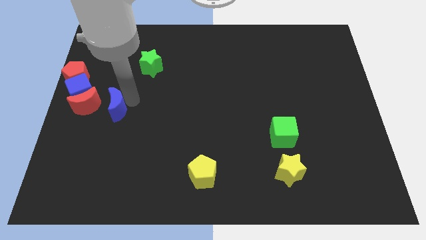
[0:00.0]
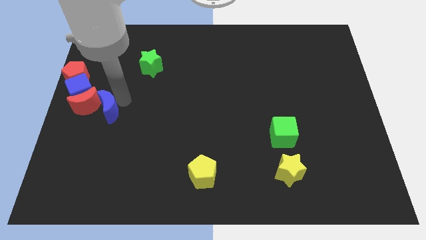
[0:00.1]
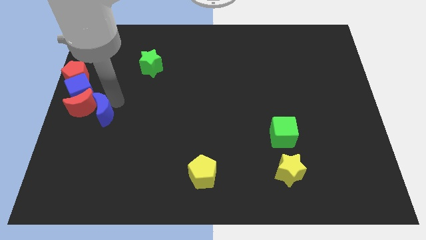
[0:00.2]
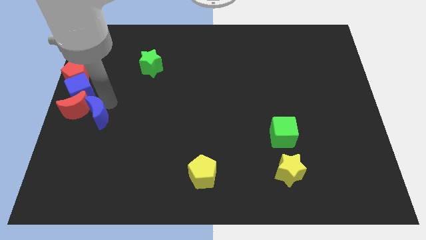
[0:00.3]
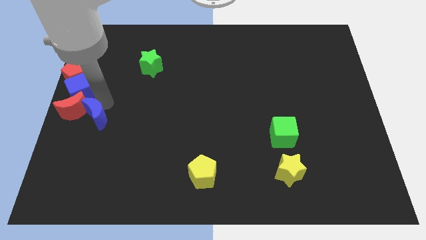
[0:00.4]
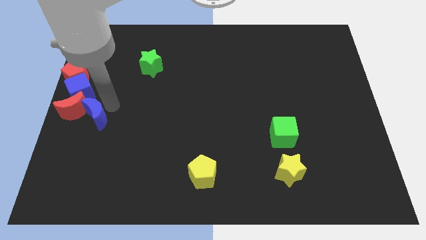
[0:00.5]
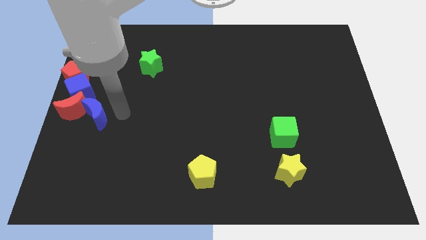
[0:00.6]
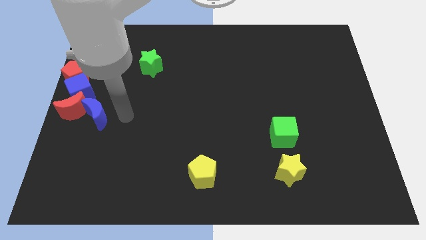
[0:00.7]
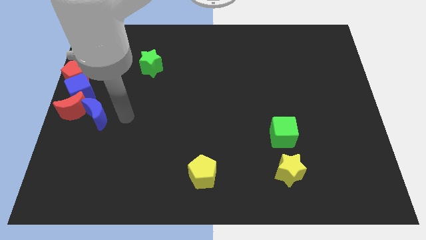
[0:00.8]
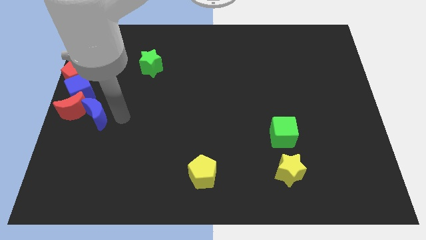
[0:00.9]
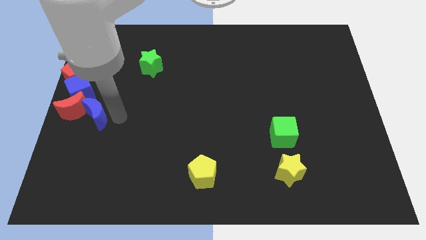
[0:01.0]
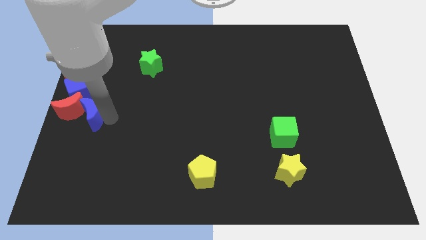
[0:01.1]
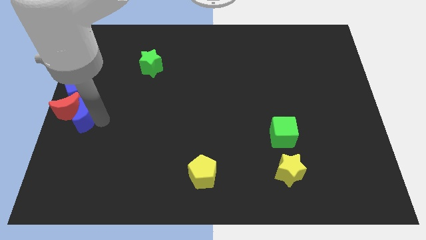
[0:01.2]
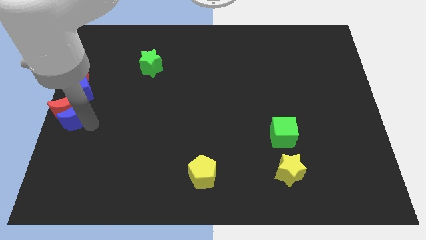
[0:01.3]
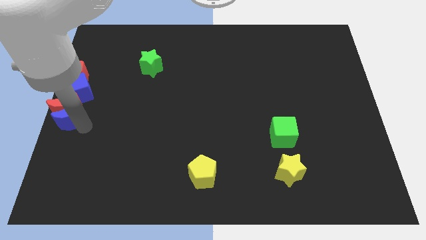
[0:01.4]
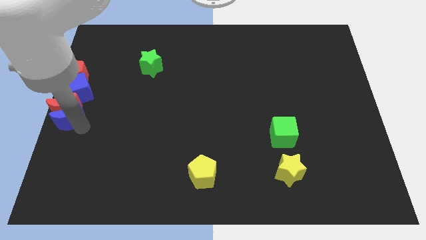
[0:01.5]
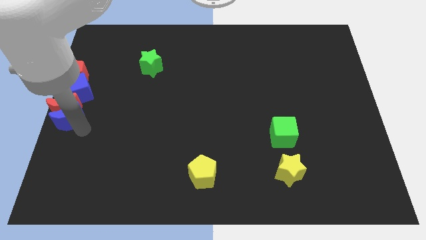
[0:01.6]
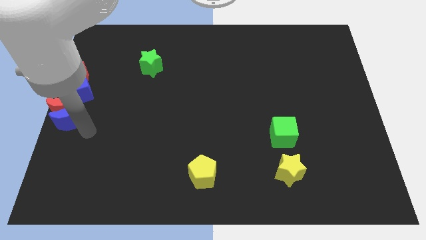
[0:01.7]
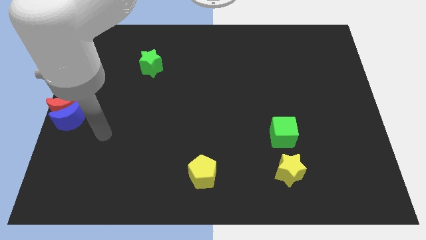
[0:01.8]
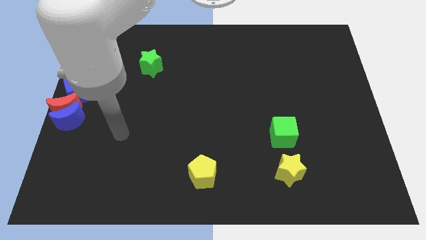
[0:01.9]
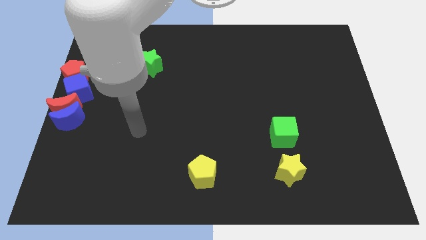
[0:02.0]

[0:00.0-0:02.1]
move the blue crescent to the bottom of the red crescent

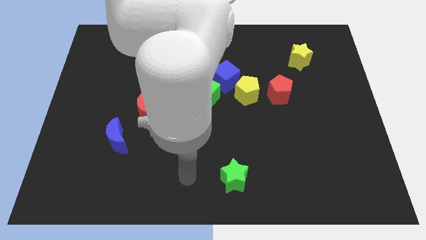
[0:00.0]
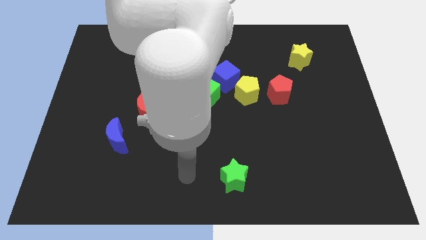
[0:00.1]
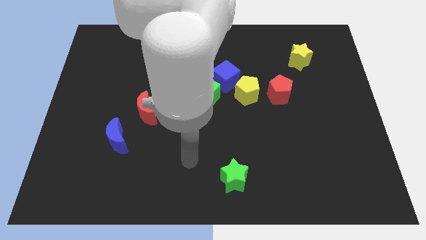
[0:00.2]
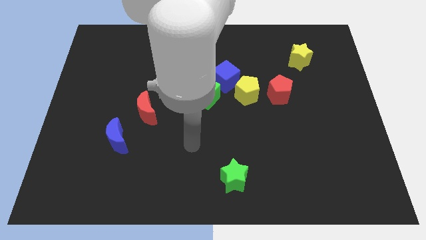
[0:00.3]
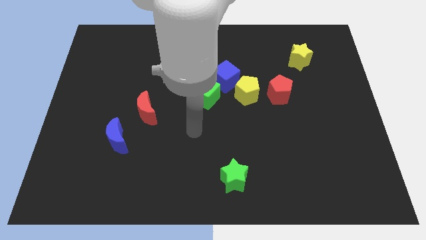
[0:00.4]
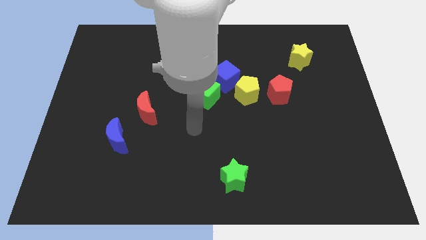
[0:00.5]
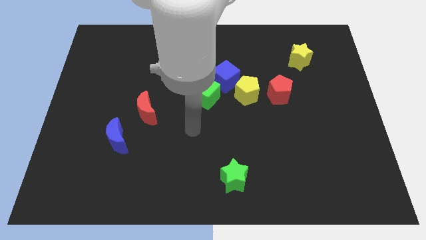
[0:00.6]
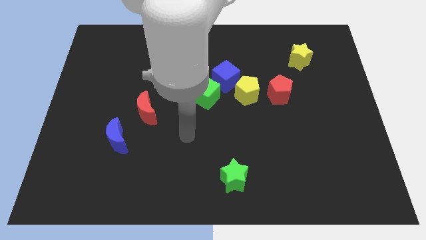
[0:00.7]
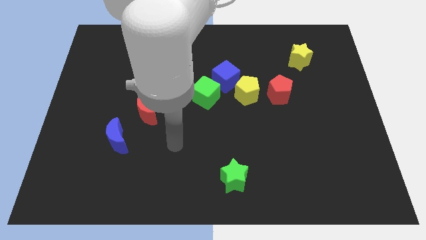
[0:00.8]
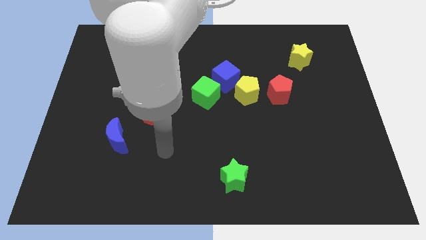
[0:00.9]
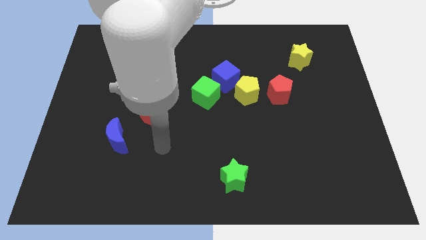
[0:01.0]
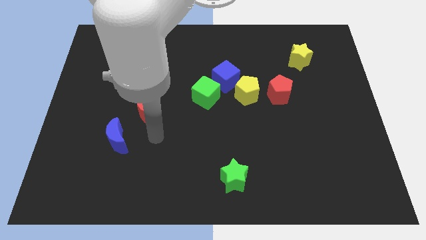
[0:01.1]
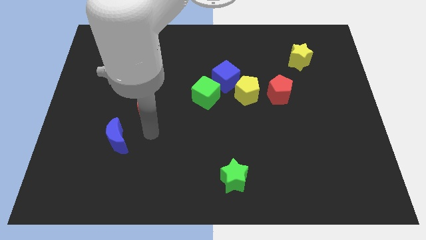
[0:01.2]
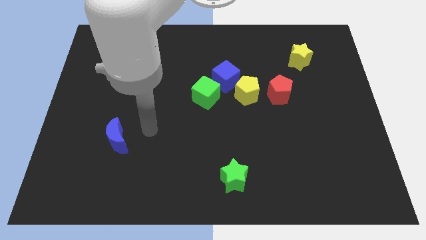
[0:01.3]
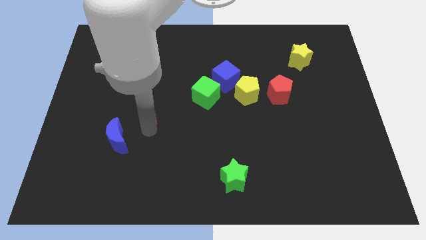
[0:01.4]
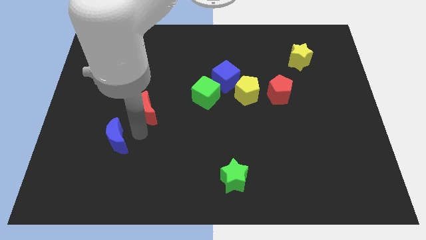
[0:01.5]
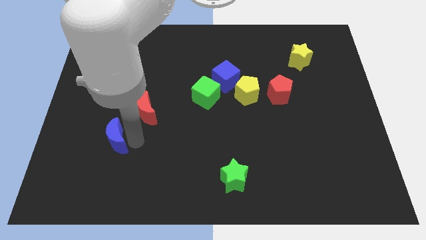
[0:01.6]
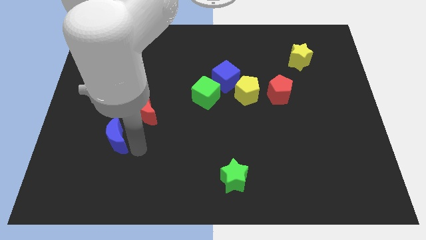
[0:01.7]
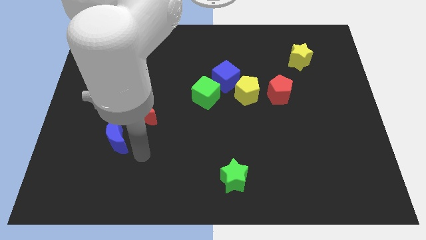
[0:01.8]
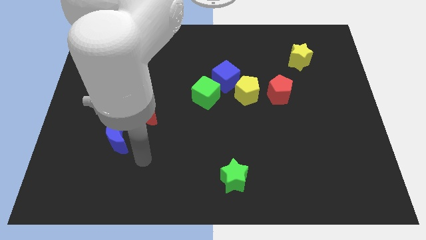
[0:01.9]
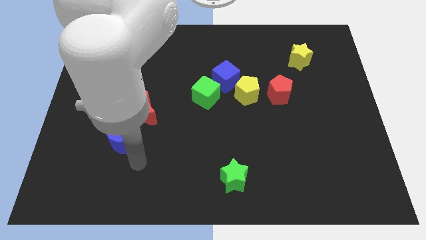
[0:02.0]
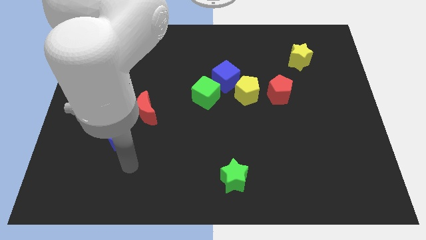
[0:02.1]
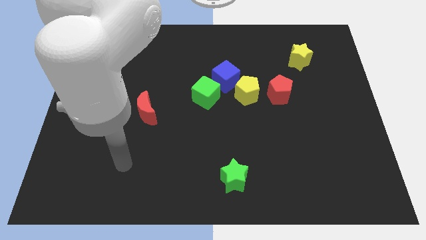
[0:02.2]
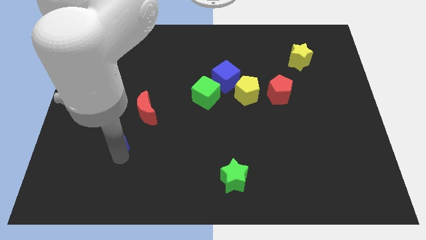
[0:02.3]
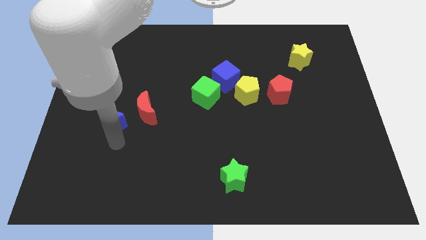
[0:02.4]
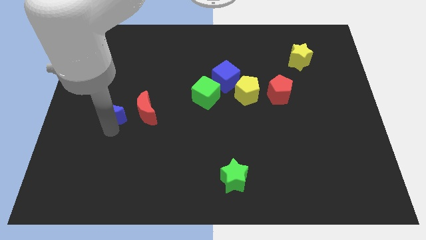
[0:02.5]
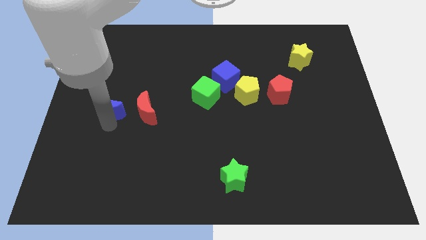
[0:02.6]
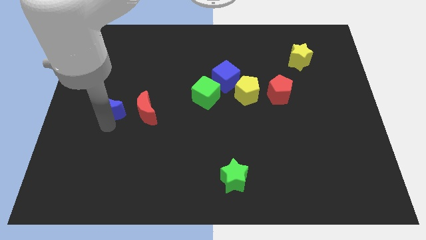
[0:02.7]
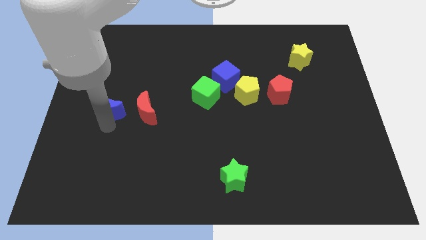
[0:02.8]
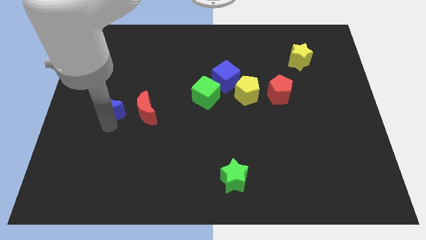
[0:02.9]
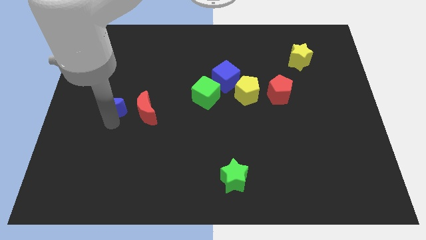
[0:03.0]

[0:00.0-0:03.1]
place the blue crescent to the left of the red crescent

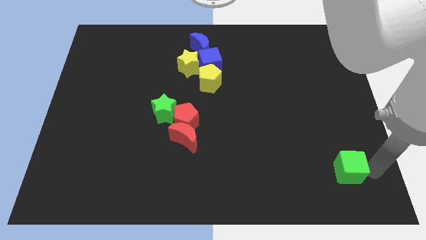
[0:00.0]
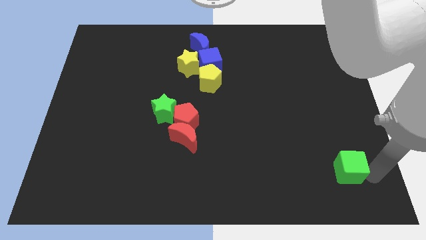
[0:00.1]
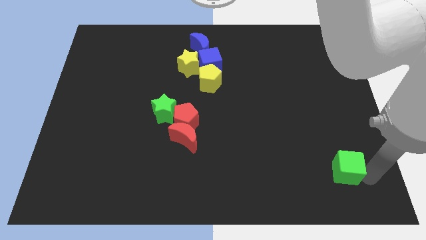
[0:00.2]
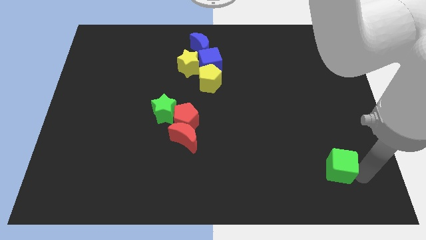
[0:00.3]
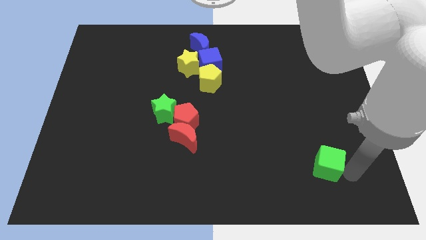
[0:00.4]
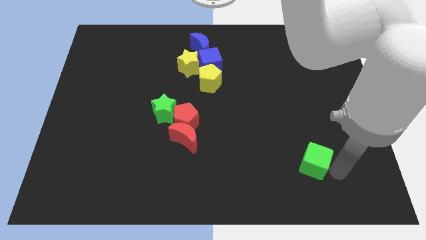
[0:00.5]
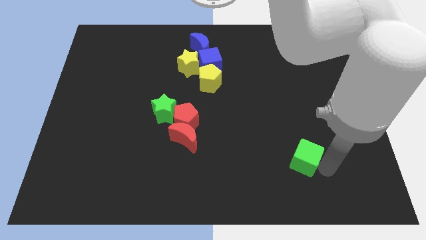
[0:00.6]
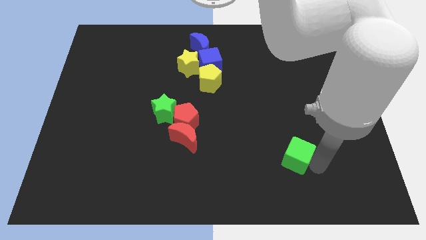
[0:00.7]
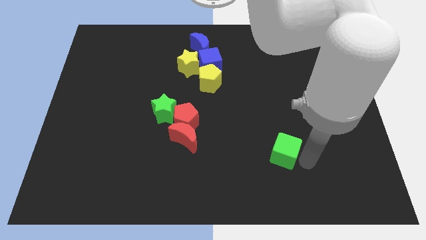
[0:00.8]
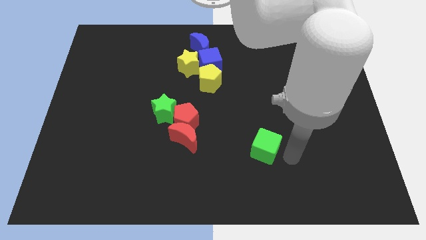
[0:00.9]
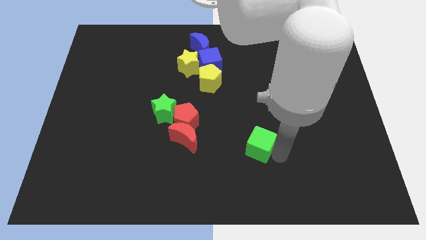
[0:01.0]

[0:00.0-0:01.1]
push the green cube towards the red pentagon

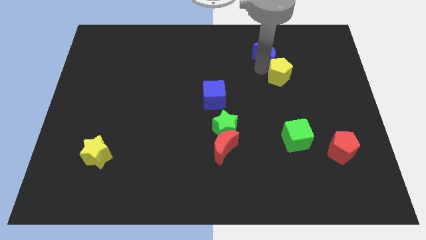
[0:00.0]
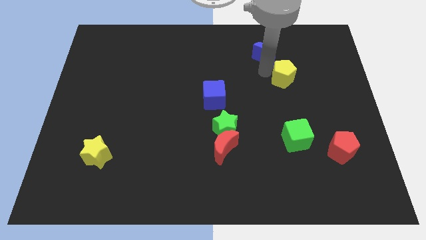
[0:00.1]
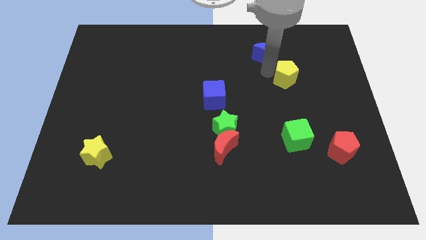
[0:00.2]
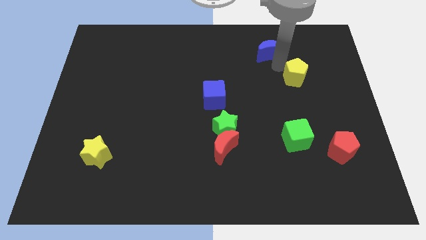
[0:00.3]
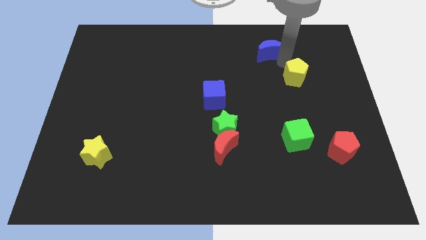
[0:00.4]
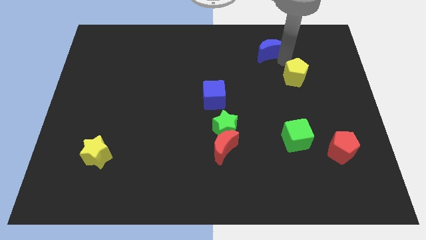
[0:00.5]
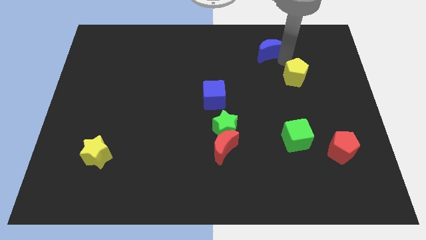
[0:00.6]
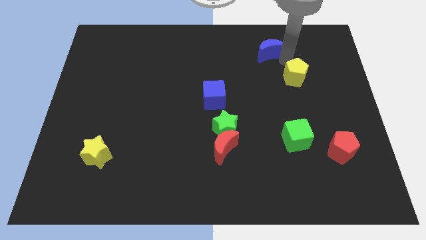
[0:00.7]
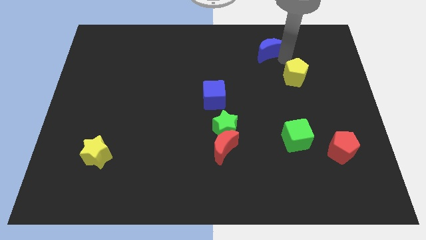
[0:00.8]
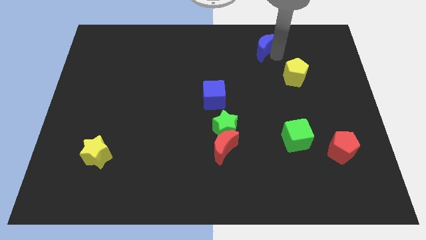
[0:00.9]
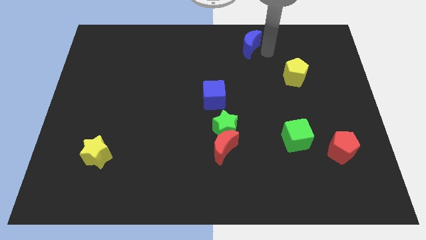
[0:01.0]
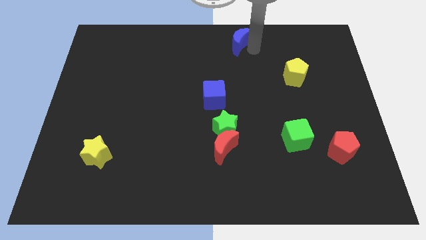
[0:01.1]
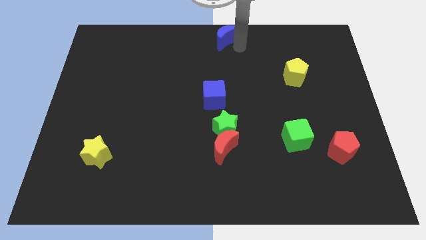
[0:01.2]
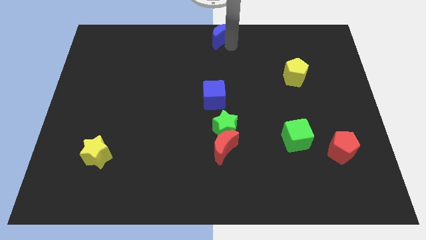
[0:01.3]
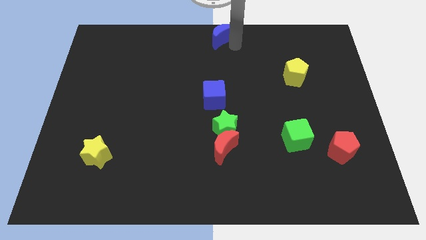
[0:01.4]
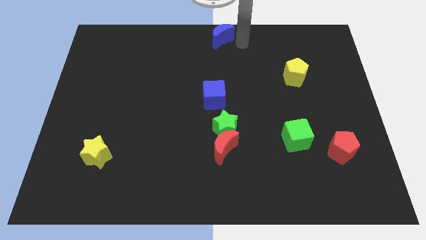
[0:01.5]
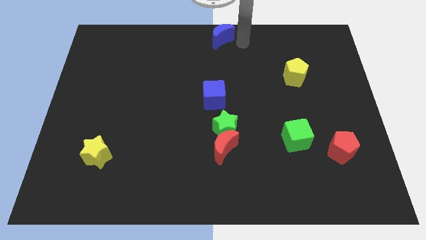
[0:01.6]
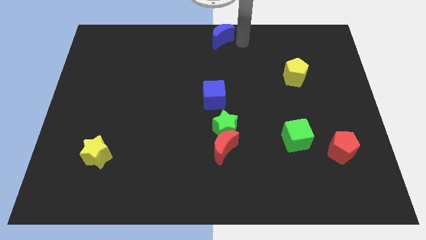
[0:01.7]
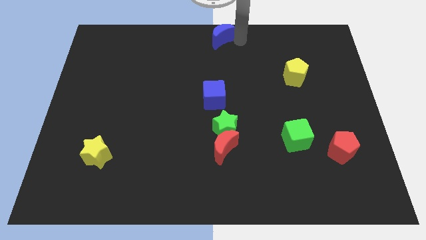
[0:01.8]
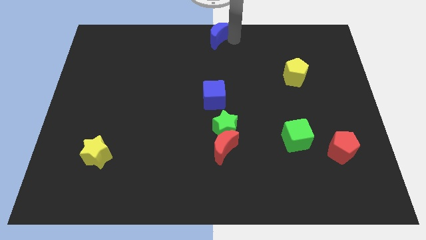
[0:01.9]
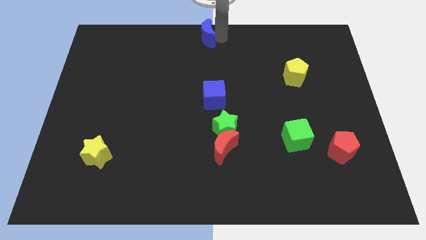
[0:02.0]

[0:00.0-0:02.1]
move the blue moon to the top center

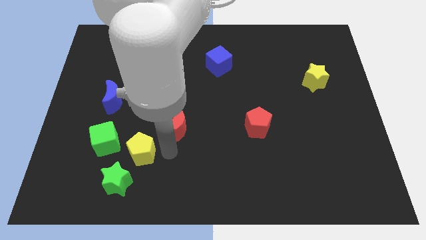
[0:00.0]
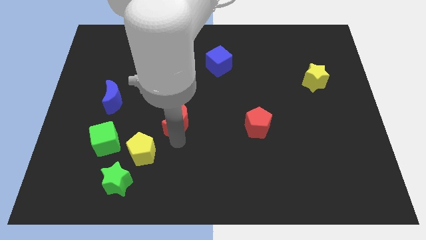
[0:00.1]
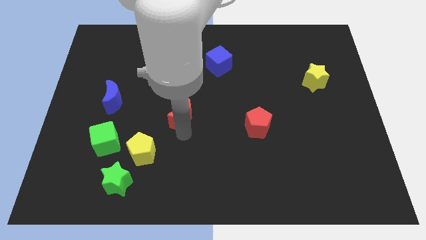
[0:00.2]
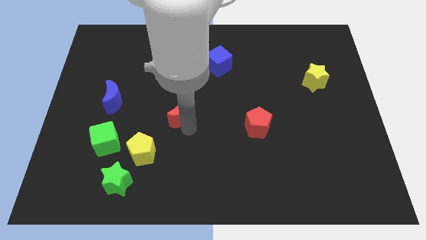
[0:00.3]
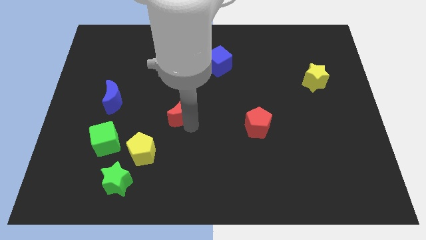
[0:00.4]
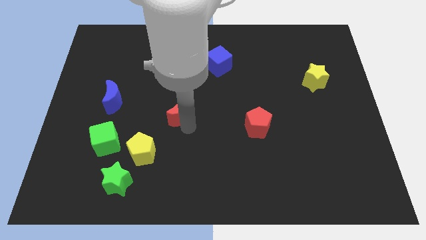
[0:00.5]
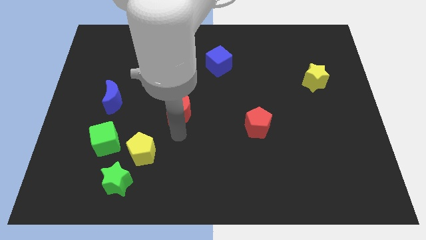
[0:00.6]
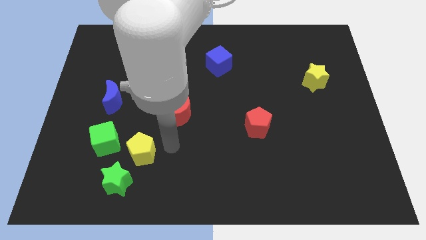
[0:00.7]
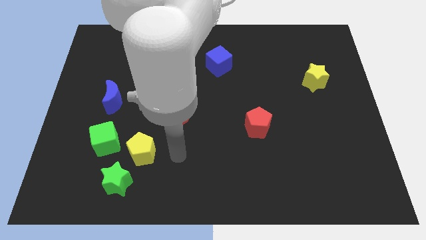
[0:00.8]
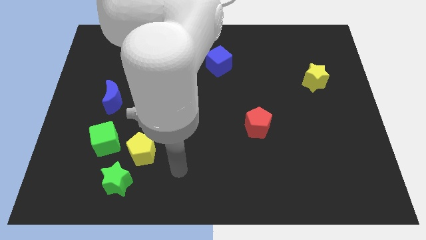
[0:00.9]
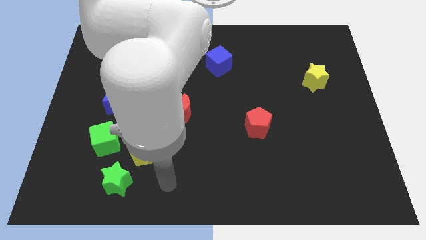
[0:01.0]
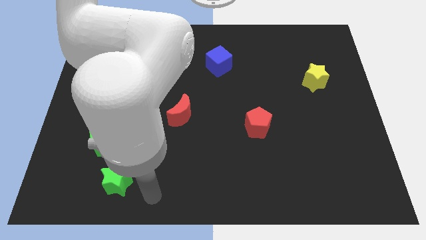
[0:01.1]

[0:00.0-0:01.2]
move the red crescent slightly up
